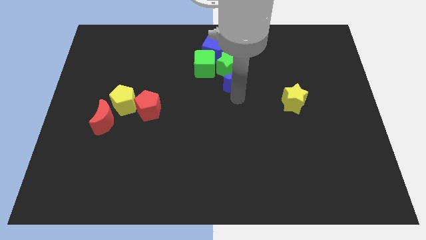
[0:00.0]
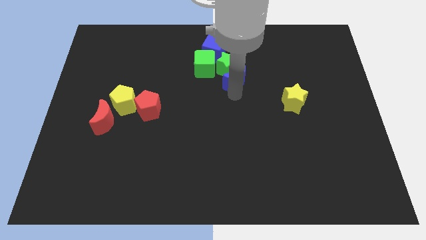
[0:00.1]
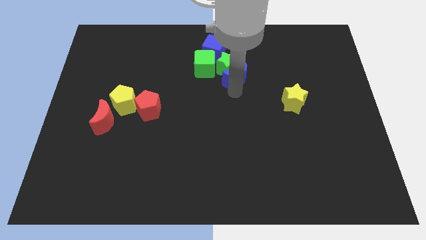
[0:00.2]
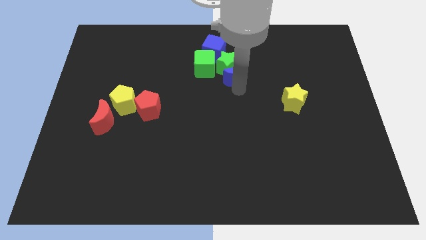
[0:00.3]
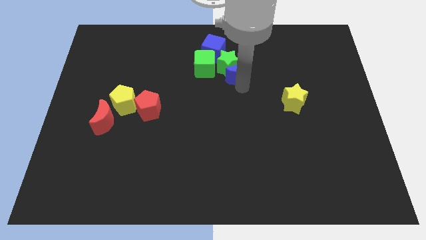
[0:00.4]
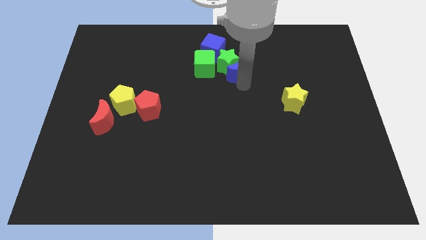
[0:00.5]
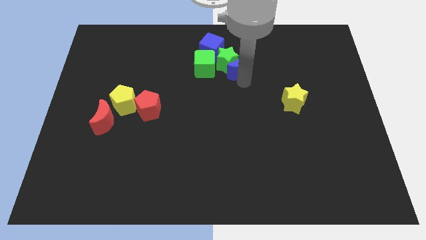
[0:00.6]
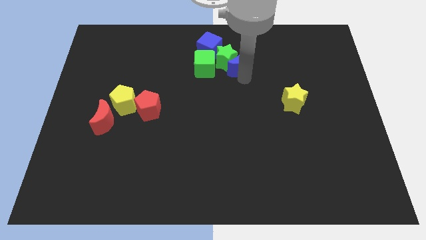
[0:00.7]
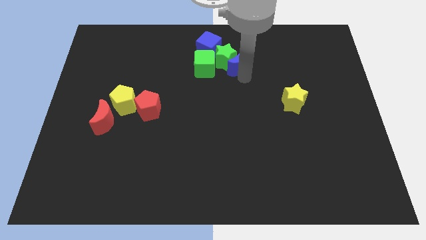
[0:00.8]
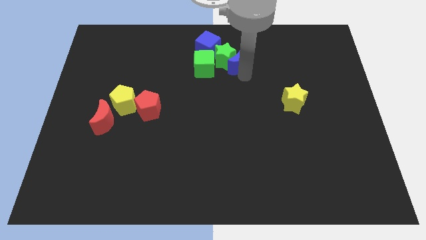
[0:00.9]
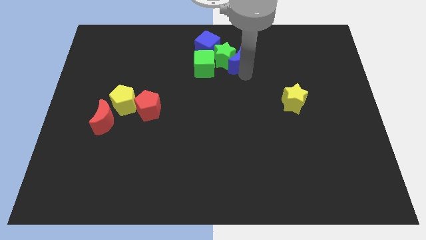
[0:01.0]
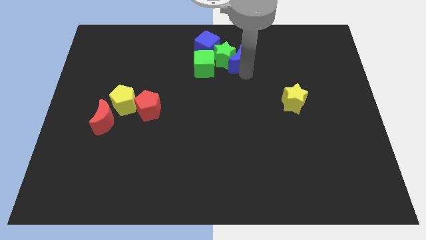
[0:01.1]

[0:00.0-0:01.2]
push the blue crescent into the green star

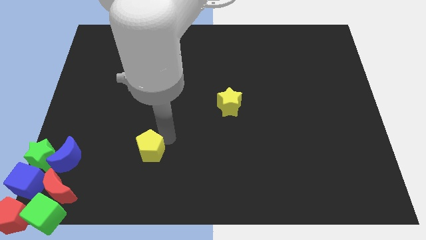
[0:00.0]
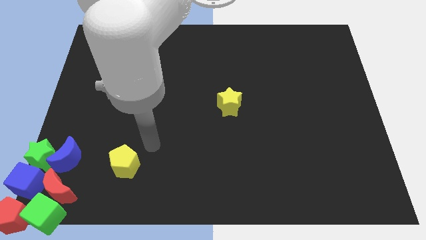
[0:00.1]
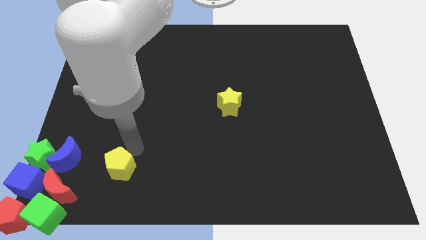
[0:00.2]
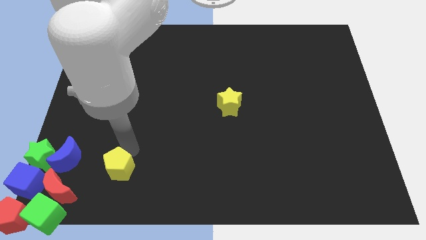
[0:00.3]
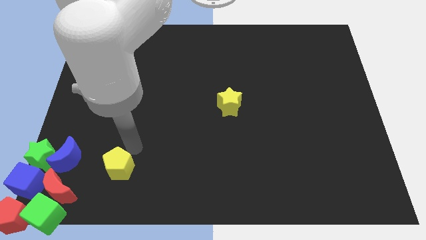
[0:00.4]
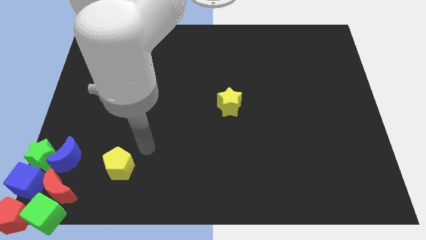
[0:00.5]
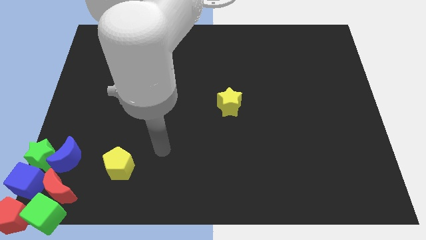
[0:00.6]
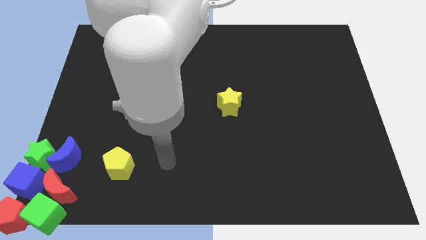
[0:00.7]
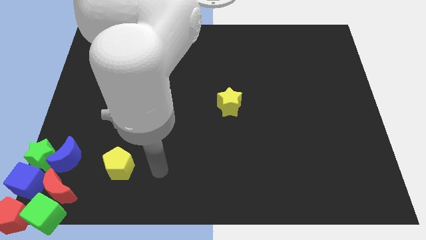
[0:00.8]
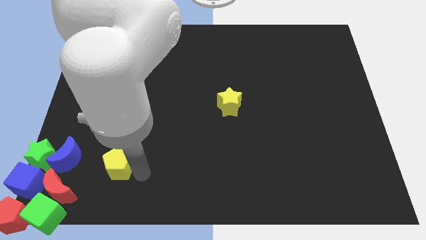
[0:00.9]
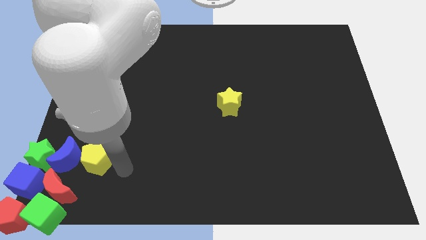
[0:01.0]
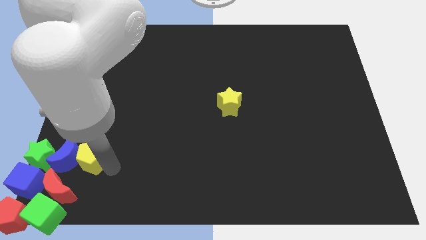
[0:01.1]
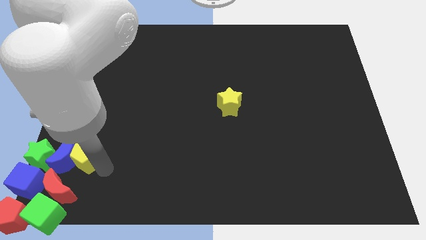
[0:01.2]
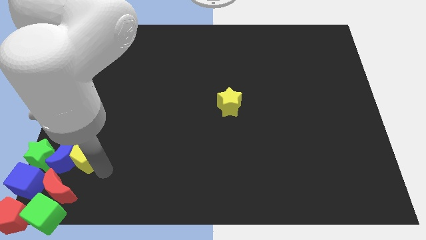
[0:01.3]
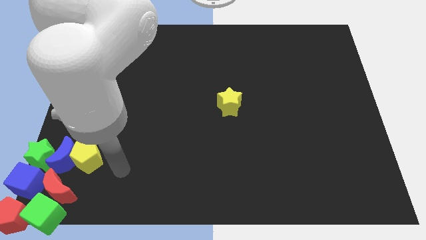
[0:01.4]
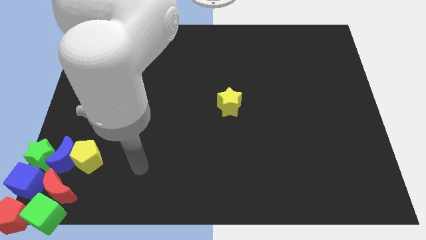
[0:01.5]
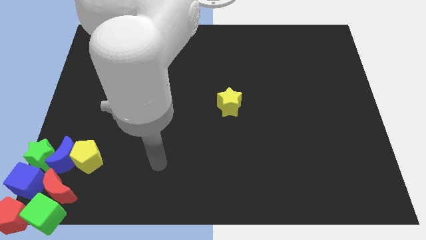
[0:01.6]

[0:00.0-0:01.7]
move the yellow pentagon right to the blue moon

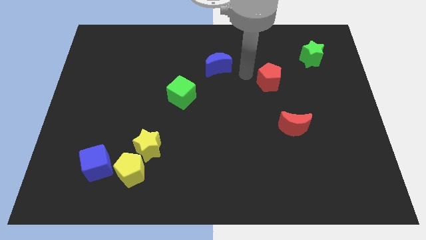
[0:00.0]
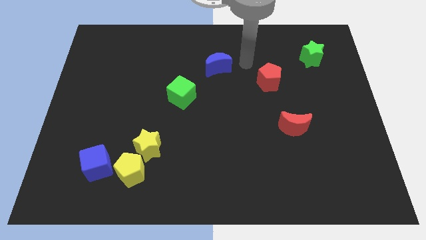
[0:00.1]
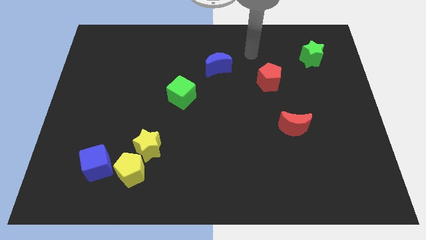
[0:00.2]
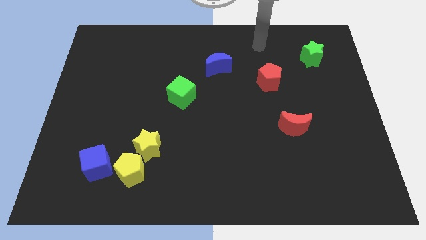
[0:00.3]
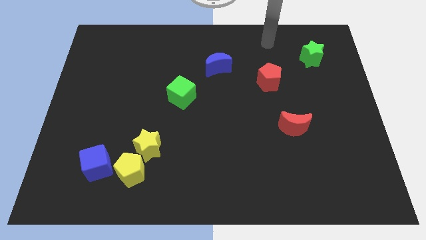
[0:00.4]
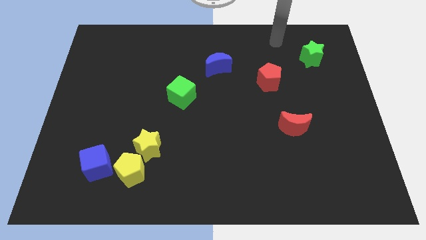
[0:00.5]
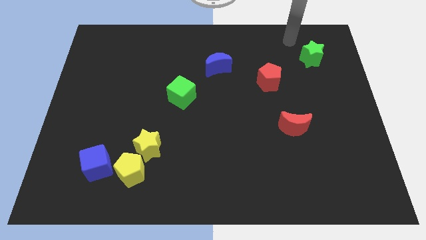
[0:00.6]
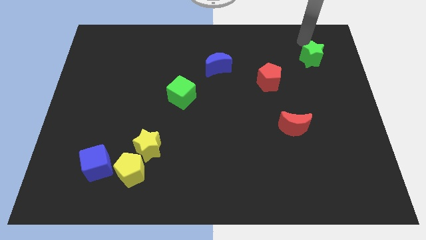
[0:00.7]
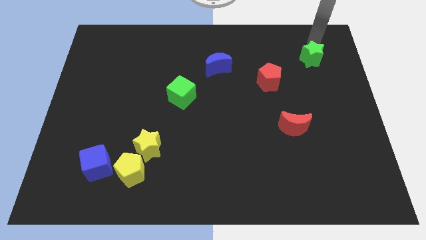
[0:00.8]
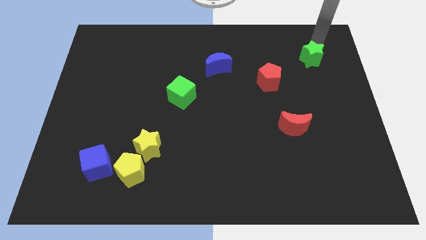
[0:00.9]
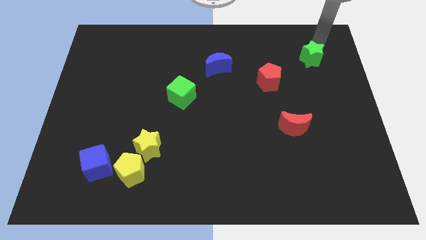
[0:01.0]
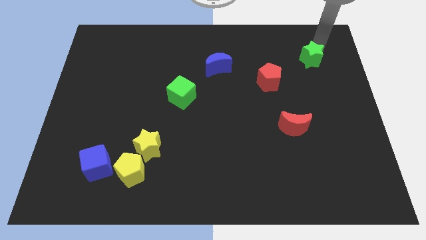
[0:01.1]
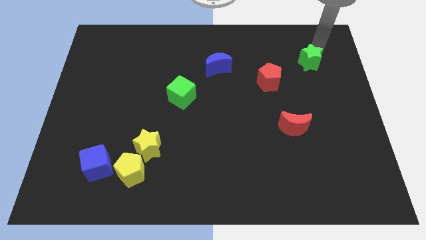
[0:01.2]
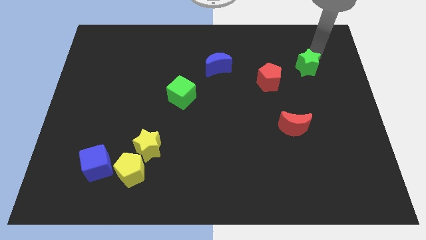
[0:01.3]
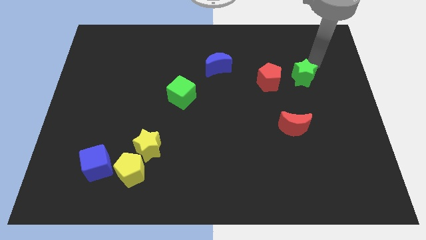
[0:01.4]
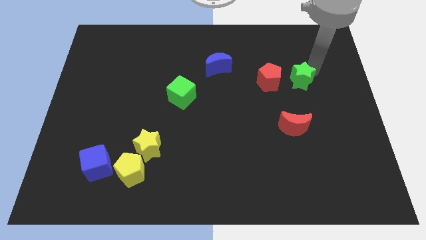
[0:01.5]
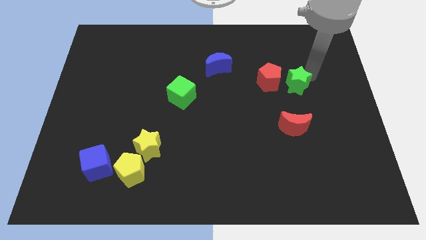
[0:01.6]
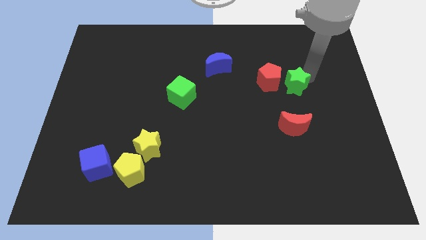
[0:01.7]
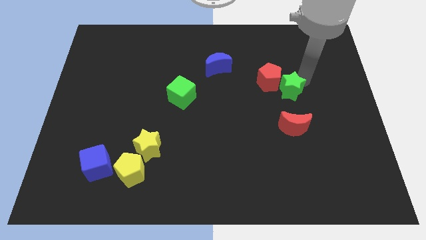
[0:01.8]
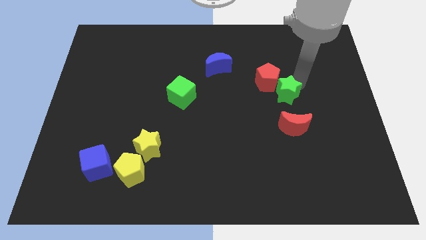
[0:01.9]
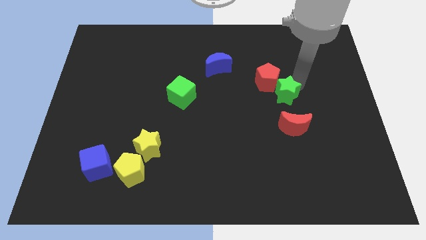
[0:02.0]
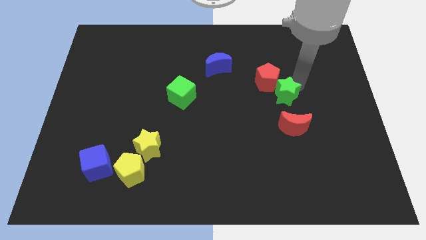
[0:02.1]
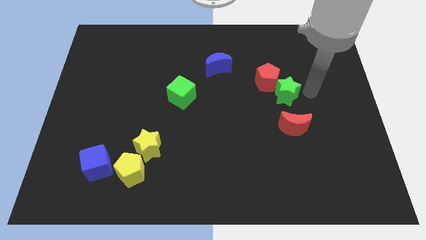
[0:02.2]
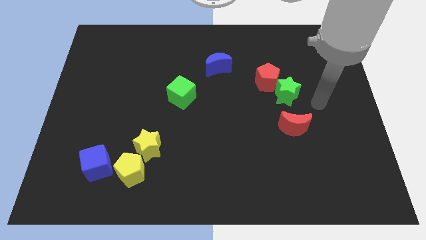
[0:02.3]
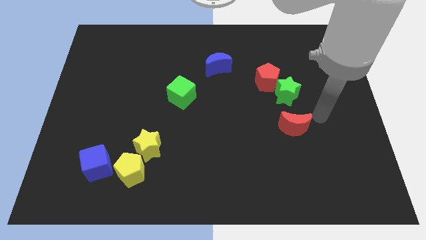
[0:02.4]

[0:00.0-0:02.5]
move green star to the bottom right of red pentagon

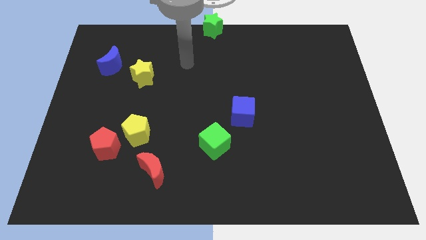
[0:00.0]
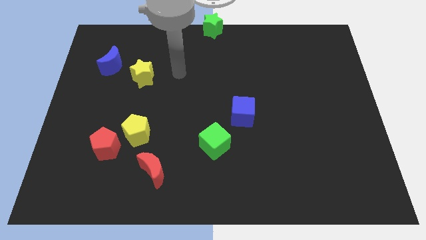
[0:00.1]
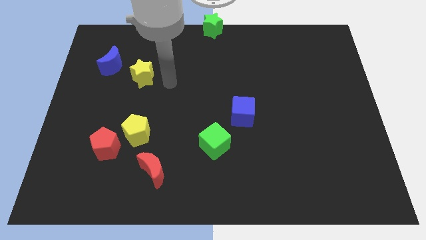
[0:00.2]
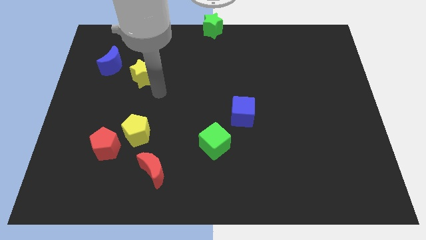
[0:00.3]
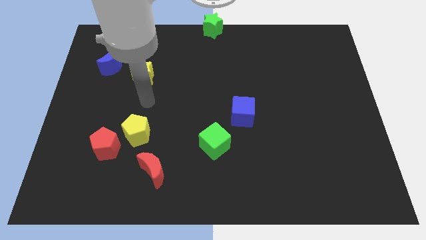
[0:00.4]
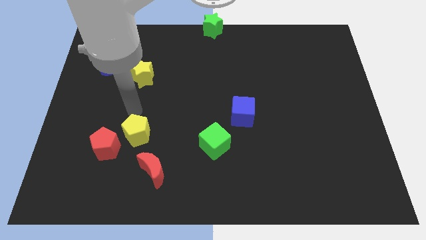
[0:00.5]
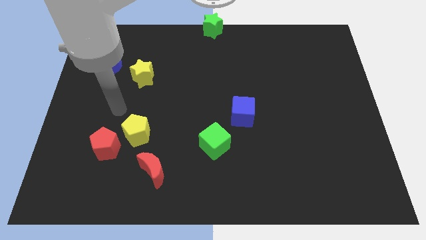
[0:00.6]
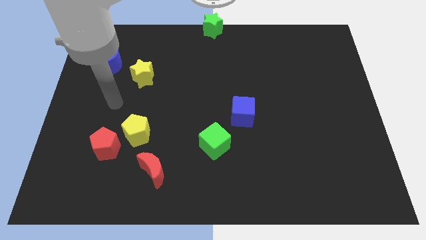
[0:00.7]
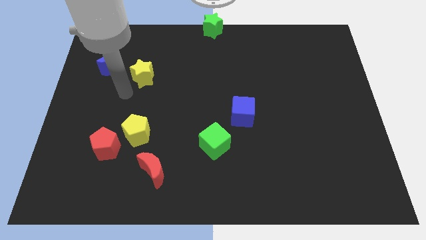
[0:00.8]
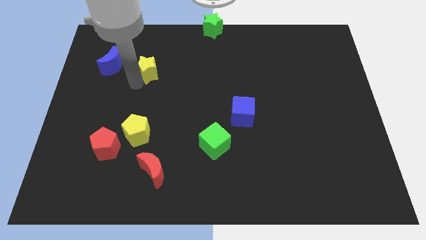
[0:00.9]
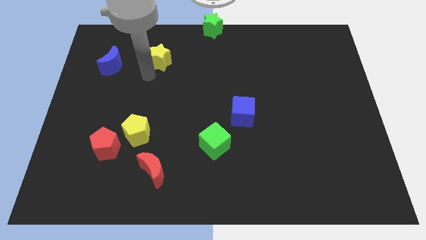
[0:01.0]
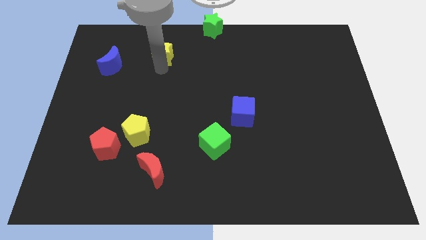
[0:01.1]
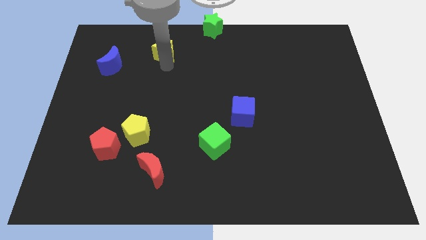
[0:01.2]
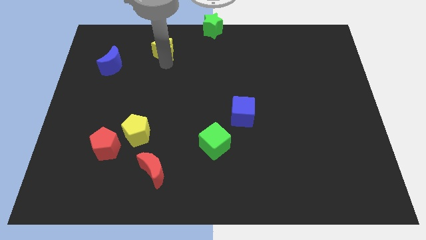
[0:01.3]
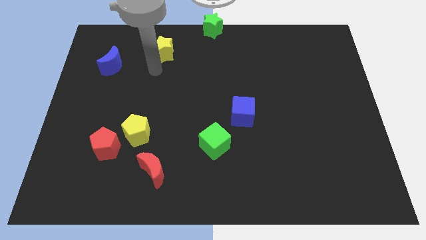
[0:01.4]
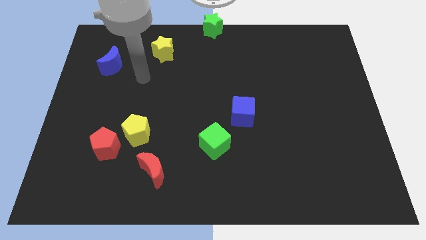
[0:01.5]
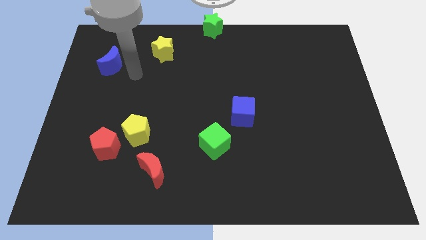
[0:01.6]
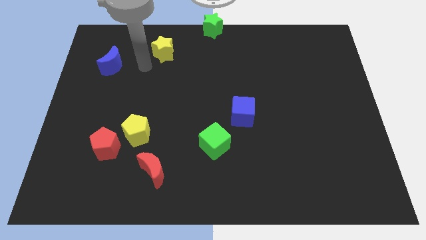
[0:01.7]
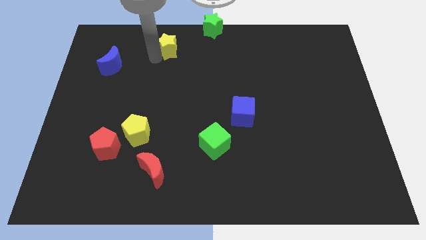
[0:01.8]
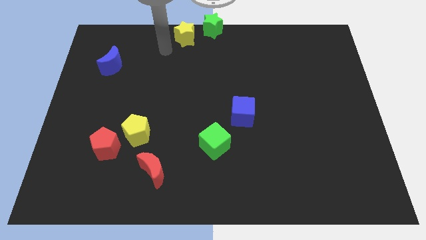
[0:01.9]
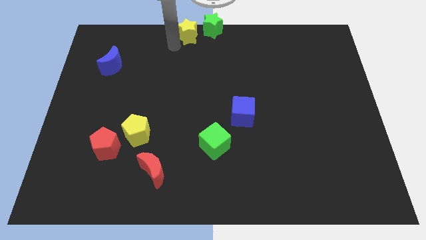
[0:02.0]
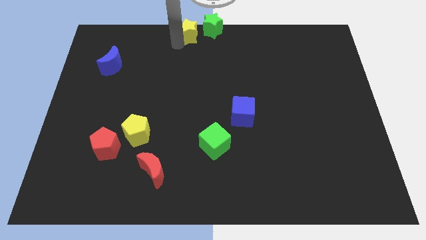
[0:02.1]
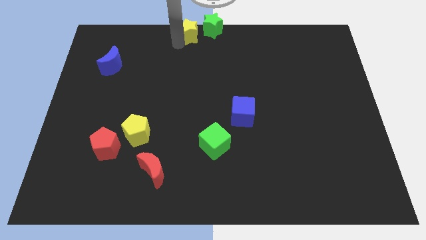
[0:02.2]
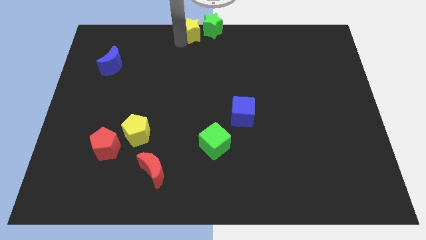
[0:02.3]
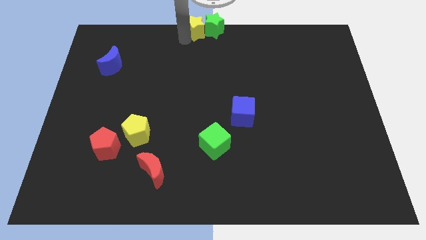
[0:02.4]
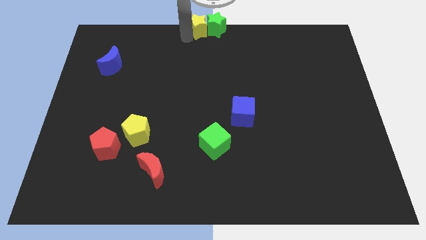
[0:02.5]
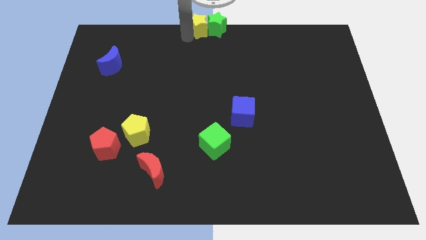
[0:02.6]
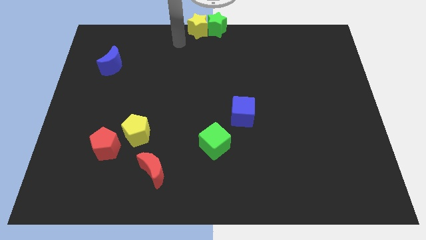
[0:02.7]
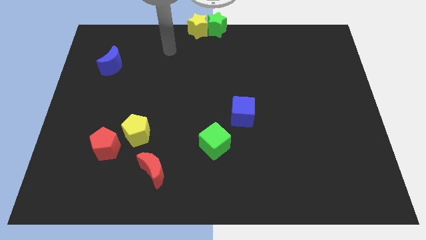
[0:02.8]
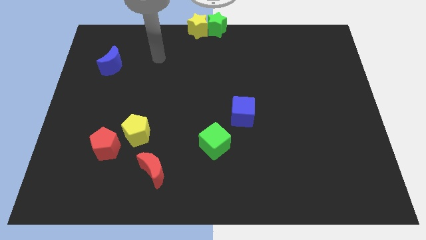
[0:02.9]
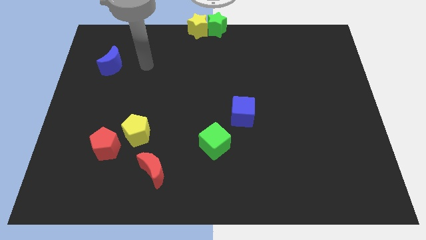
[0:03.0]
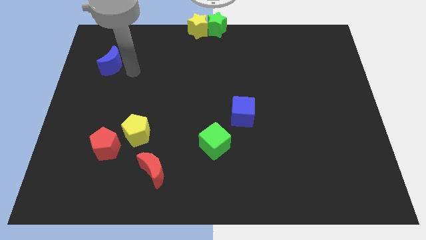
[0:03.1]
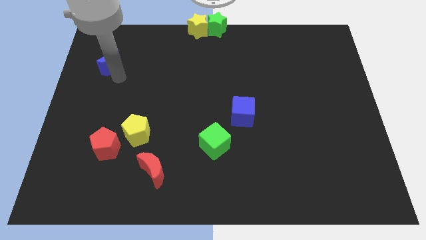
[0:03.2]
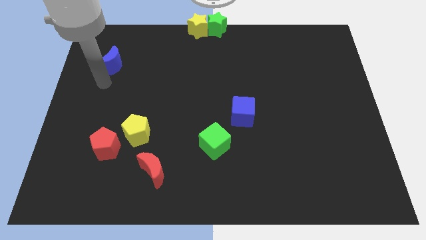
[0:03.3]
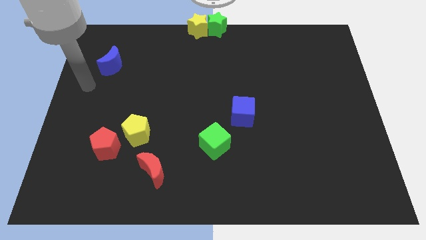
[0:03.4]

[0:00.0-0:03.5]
push the yellow star to the left of the green star
